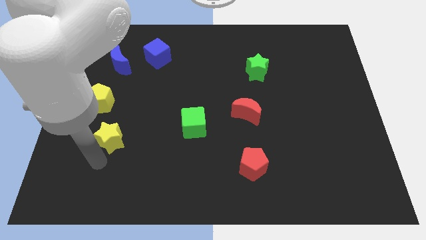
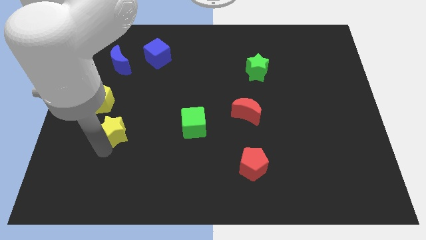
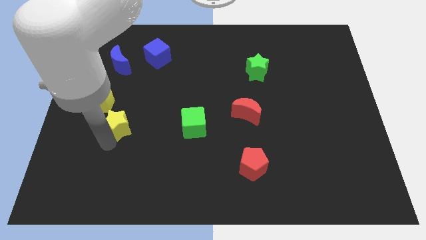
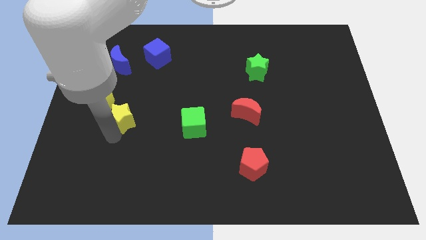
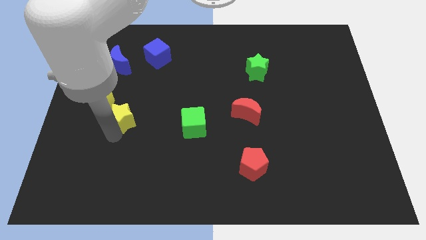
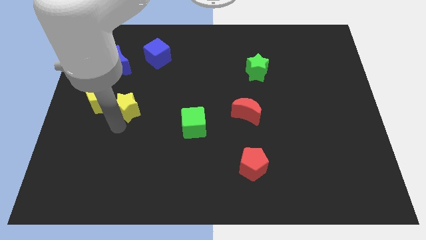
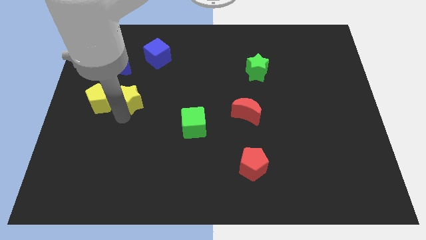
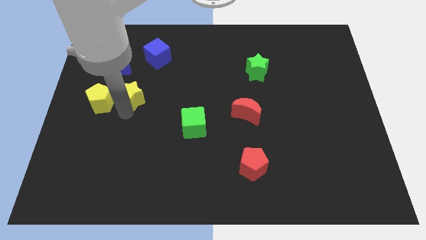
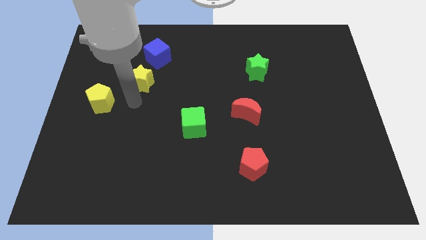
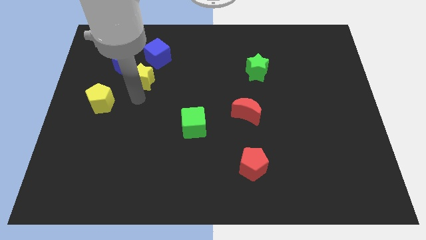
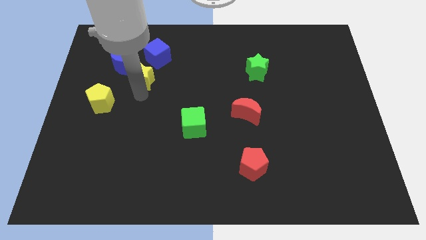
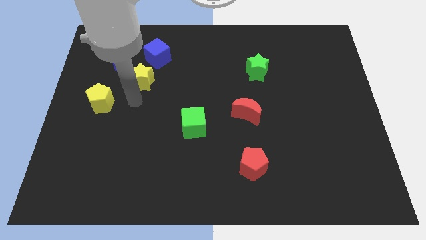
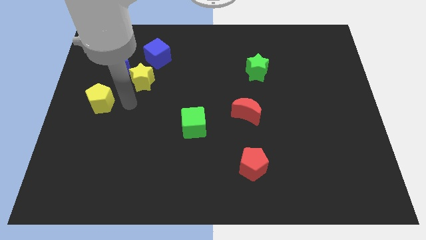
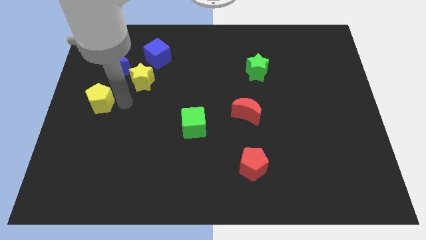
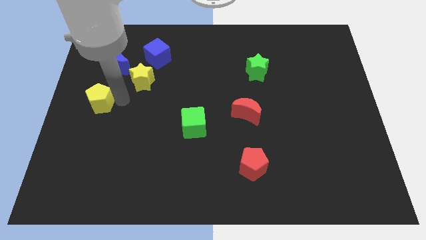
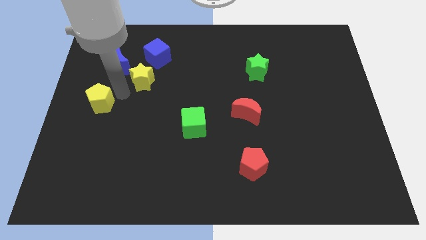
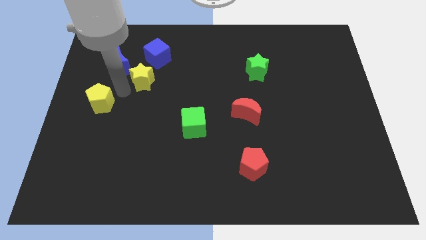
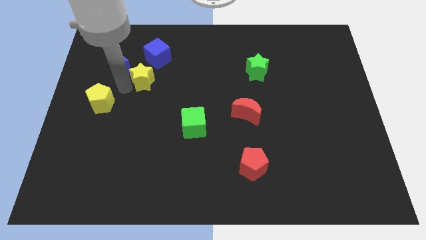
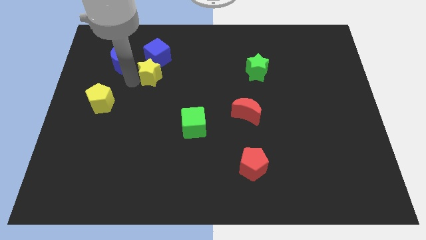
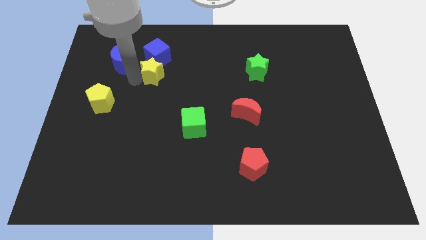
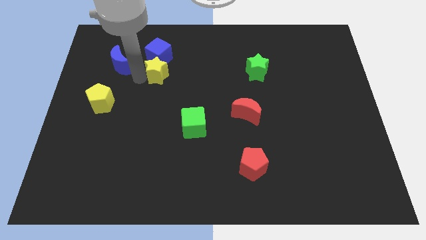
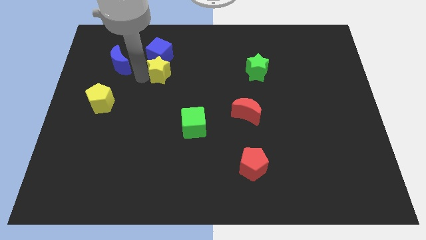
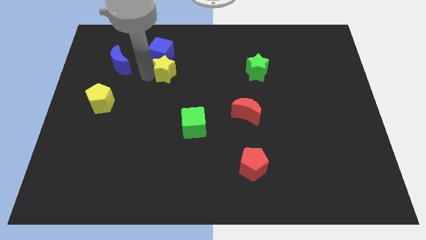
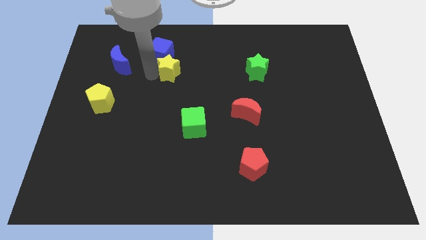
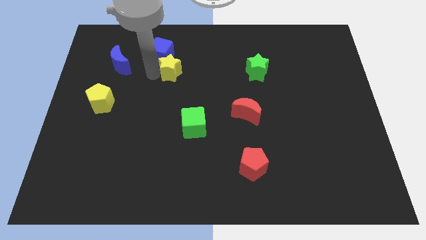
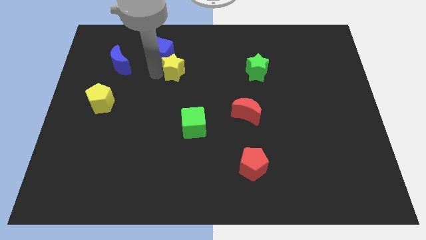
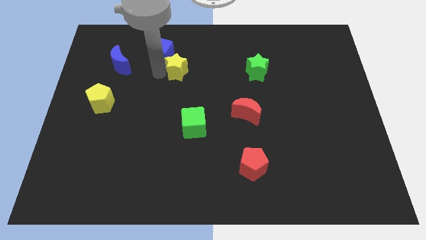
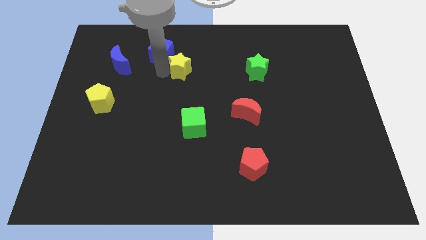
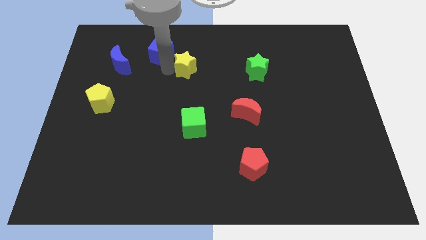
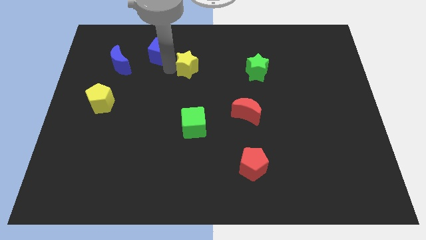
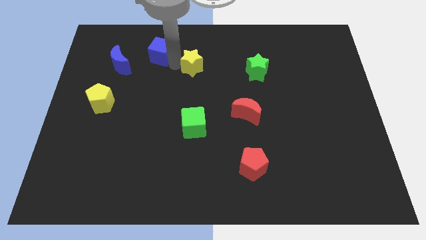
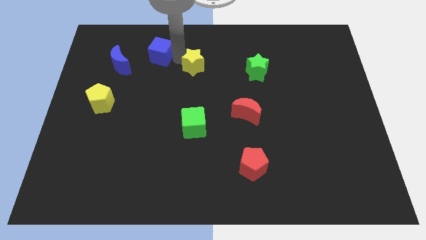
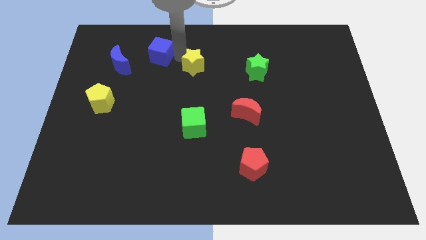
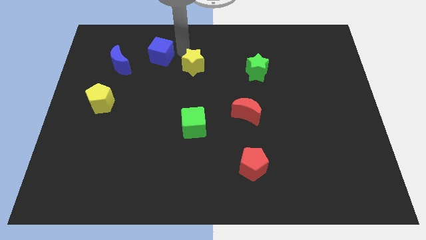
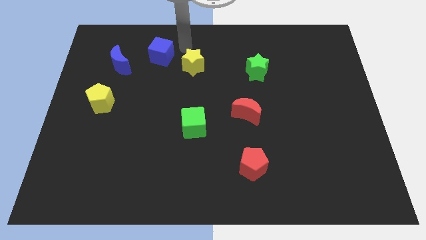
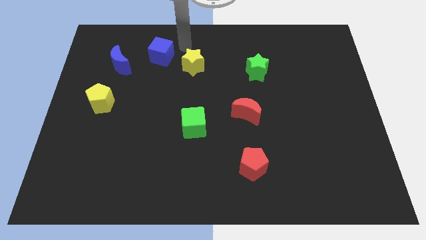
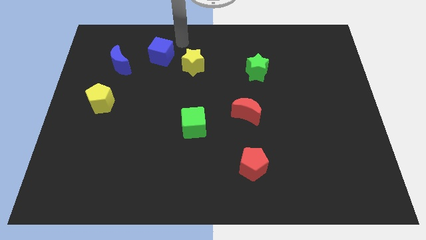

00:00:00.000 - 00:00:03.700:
move the yellow star to the right of the blue cube

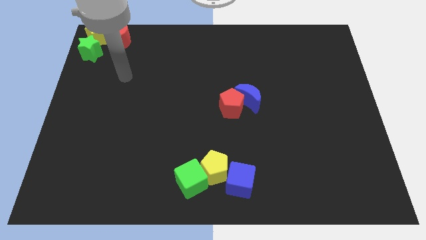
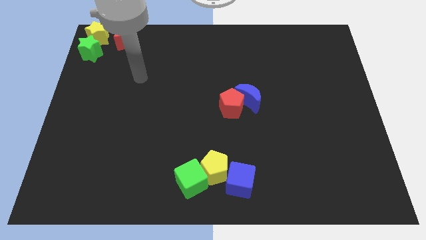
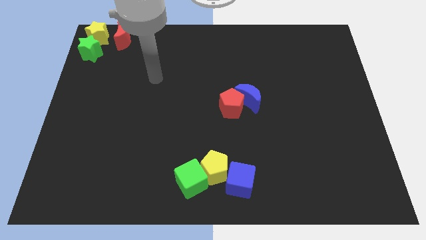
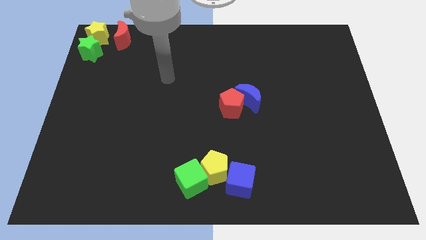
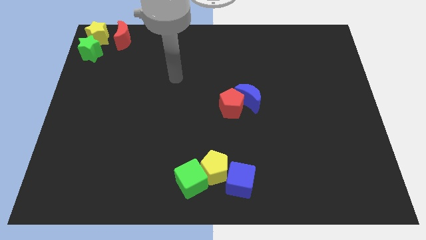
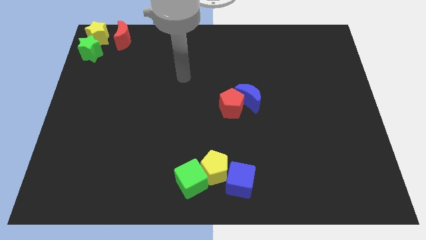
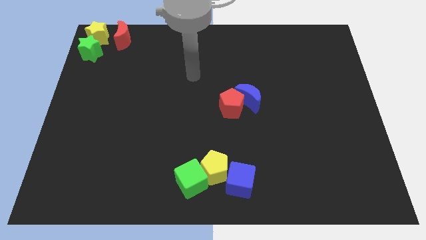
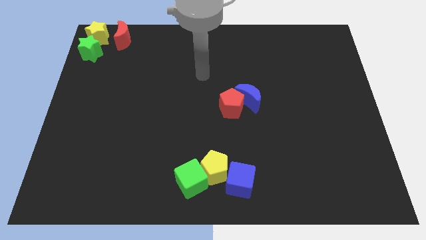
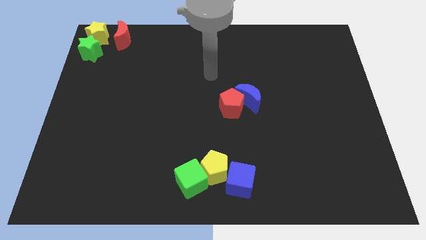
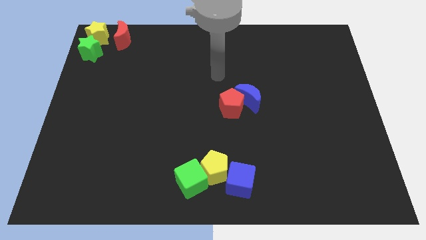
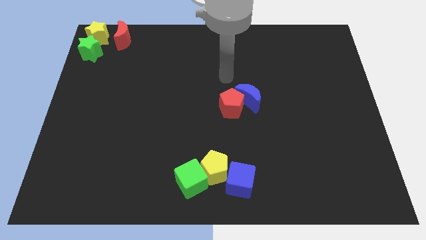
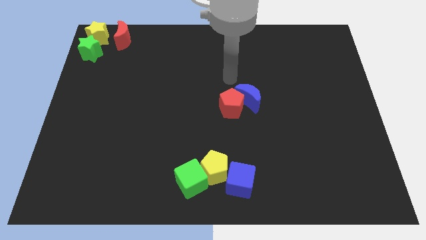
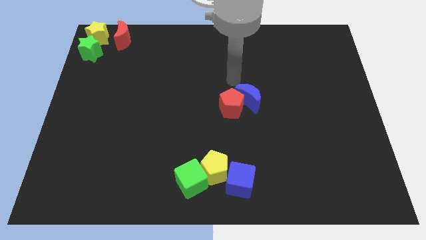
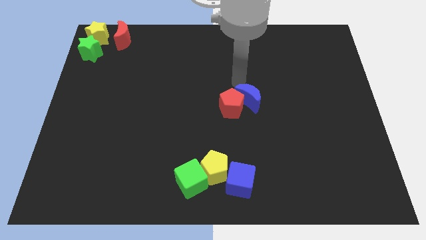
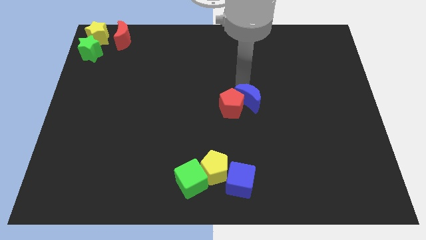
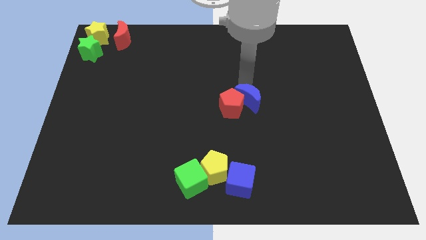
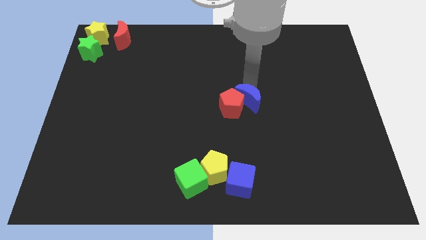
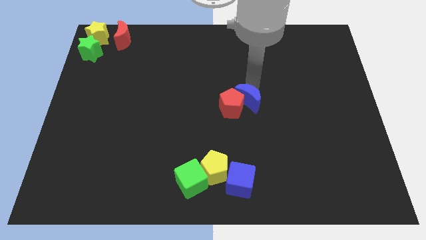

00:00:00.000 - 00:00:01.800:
place your arm above the blue moon

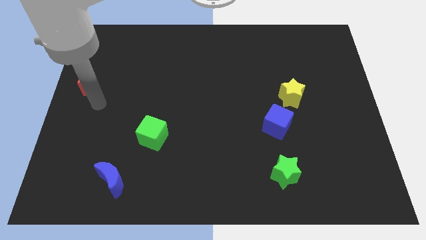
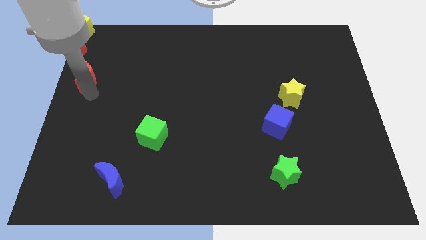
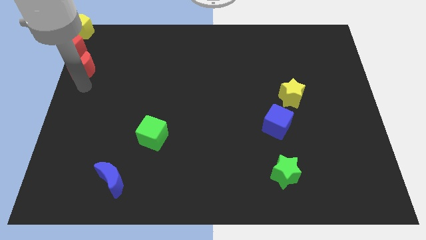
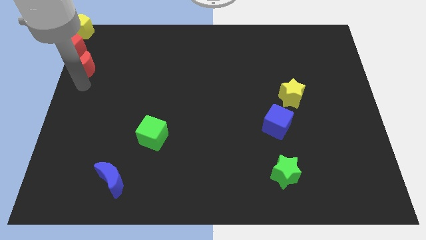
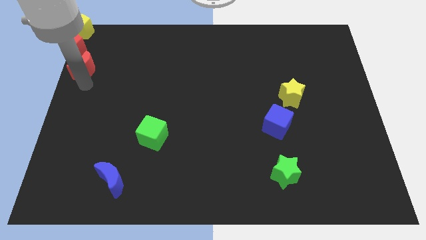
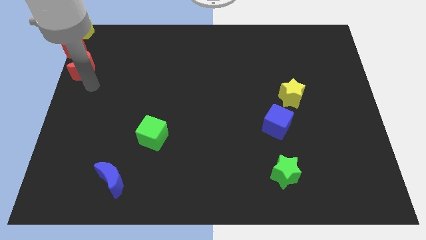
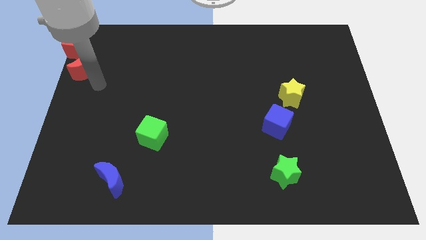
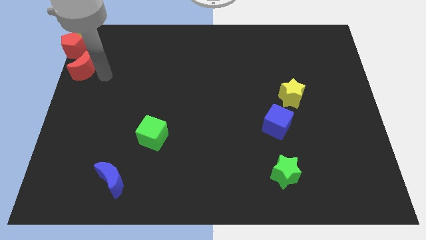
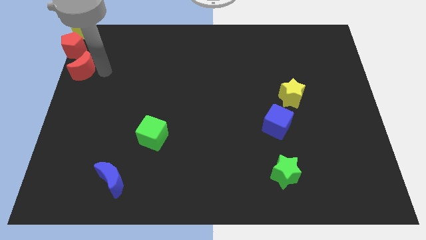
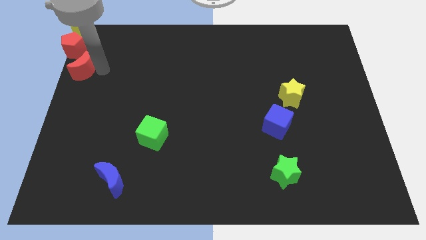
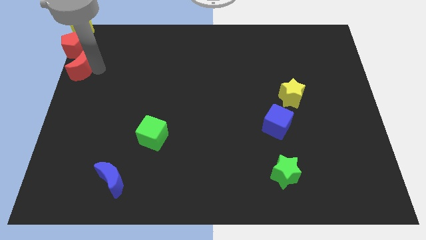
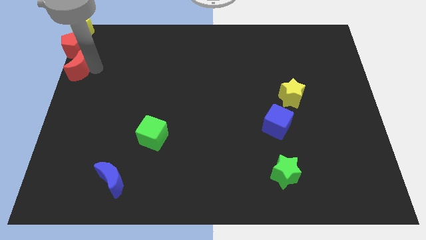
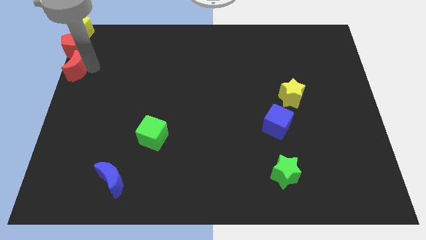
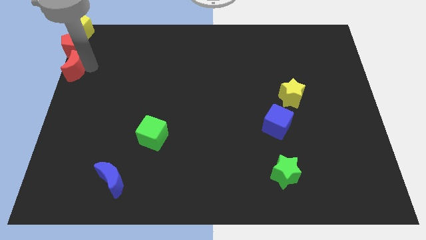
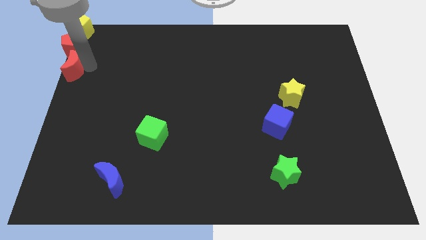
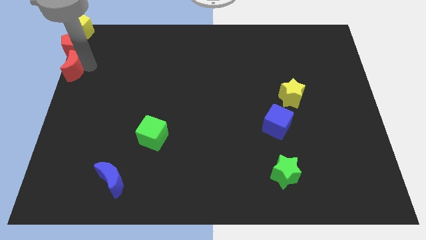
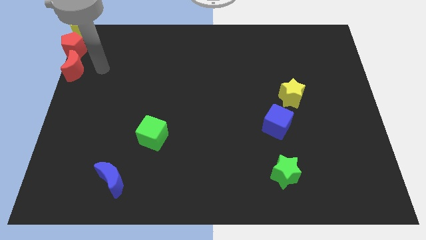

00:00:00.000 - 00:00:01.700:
move the red crescent to the bottom of the red pentagon

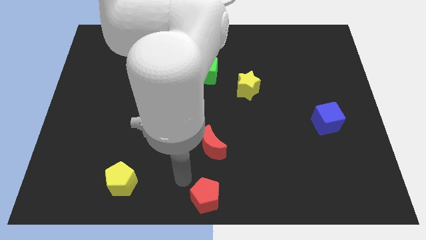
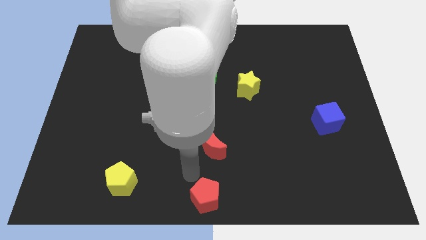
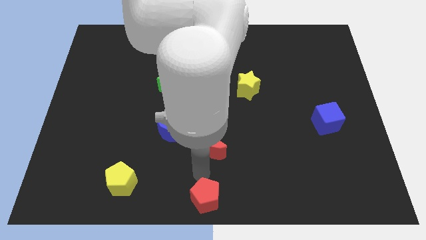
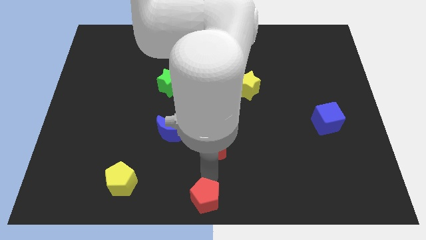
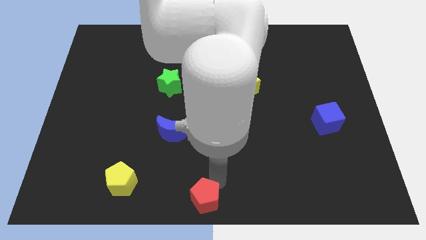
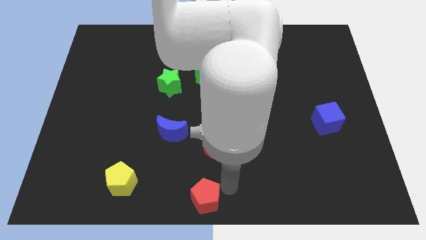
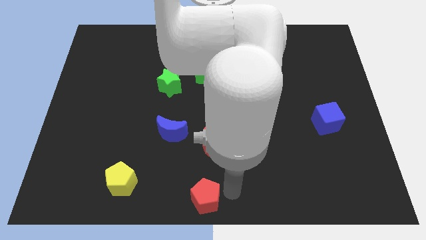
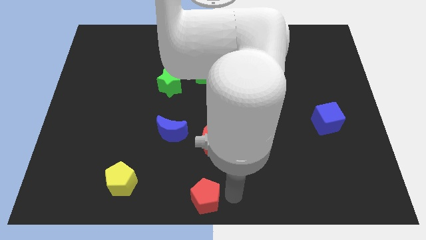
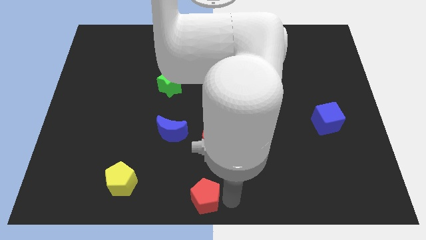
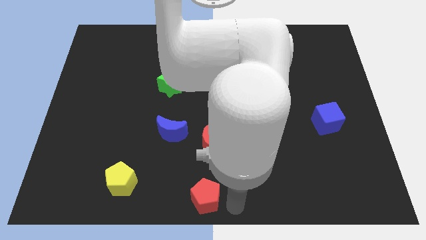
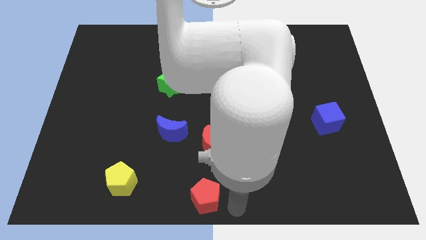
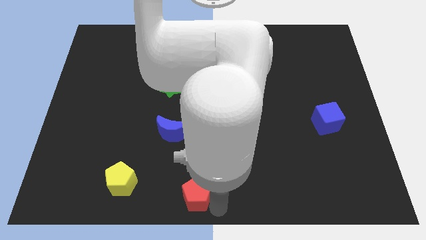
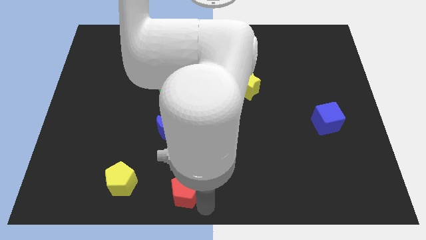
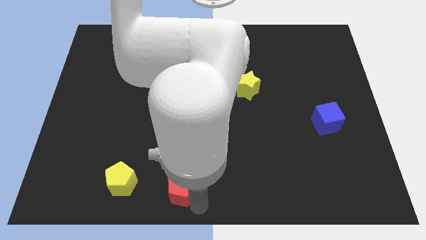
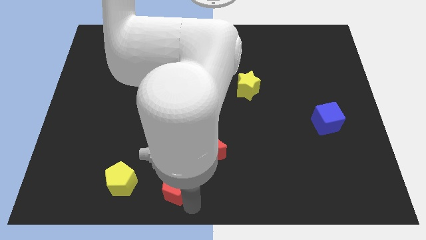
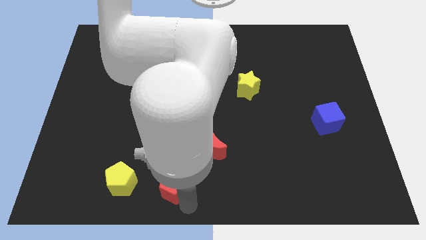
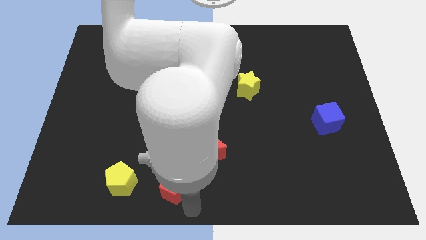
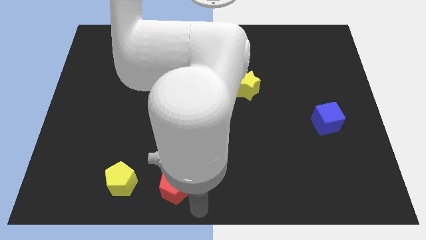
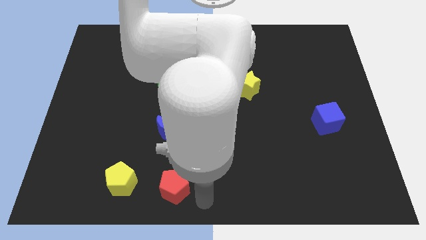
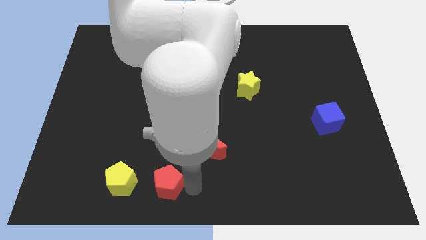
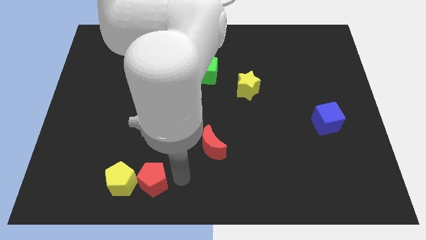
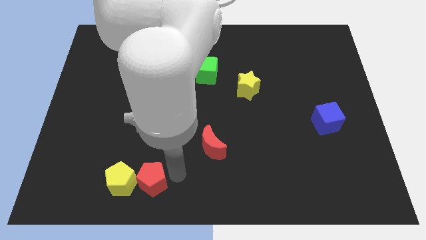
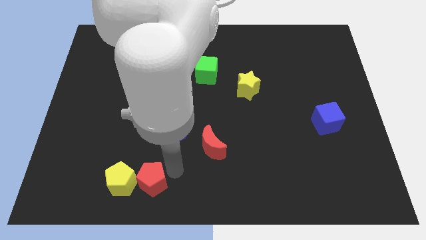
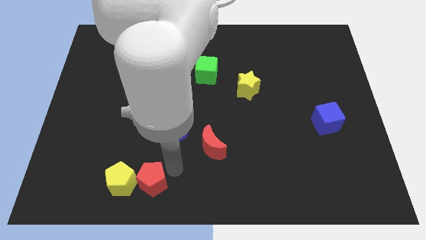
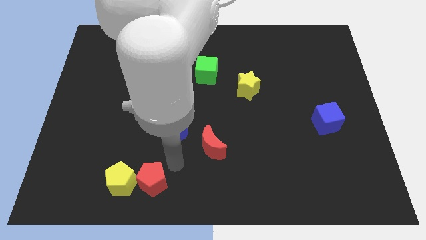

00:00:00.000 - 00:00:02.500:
move the red pentagon into the yellow pentagon
